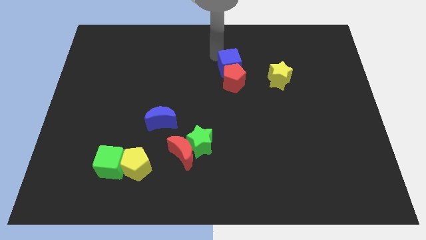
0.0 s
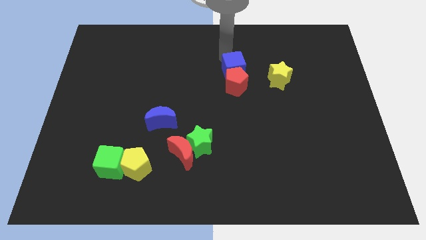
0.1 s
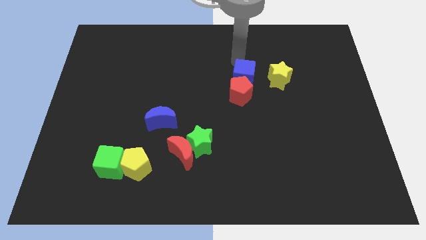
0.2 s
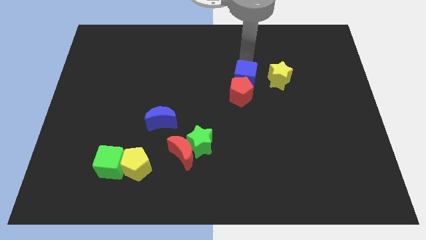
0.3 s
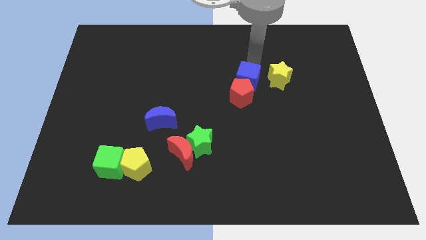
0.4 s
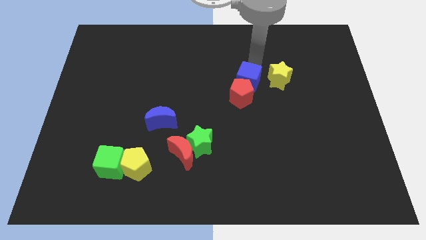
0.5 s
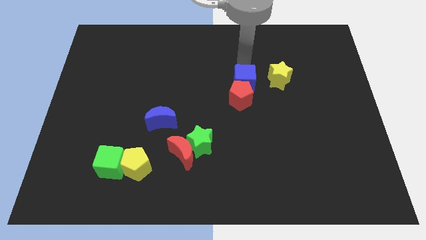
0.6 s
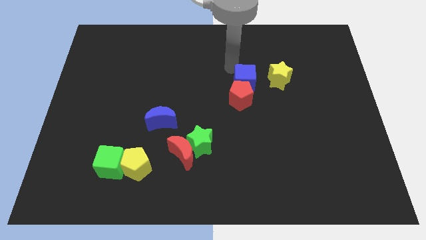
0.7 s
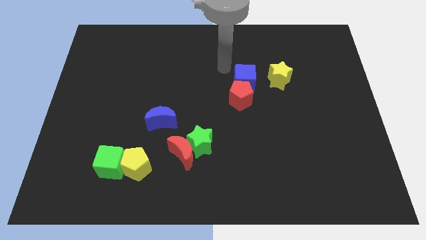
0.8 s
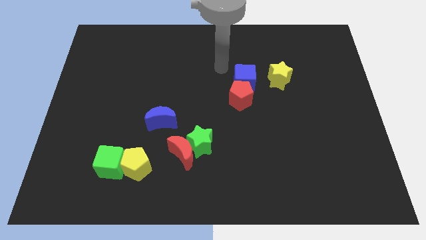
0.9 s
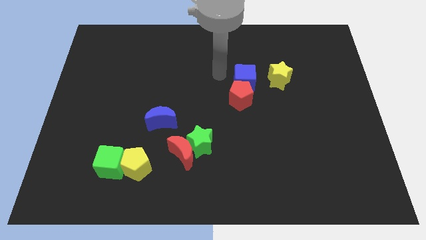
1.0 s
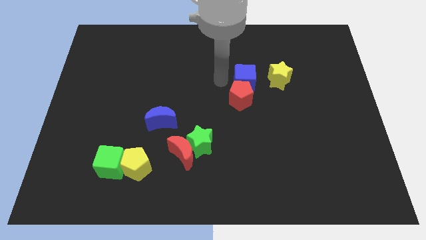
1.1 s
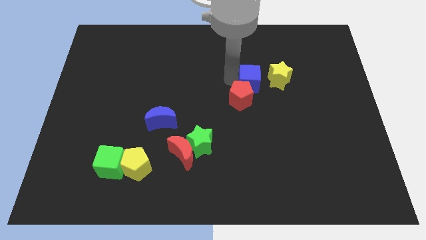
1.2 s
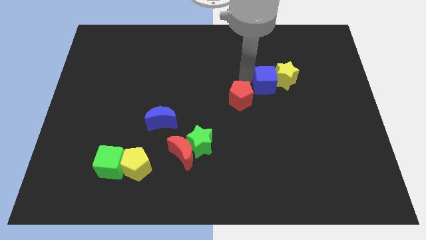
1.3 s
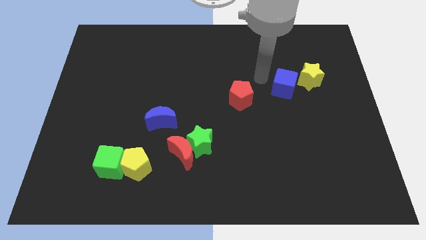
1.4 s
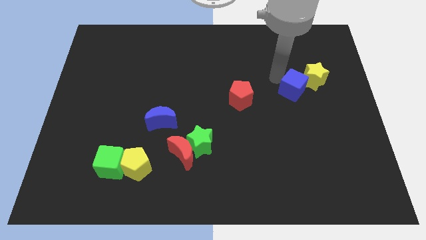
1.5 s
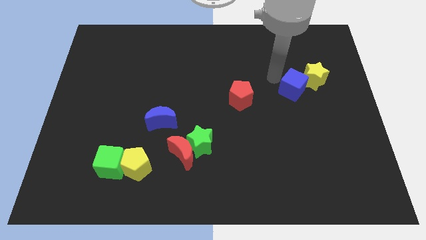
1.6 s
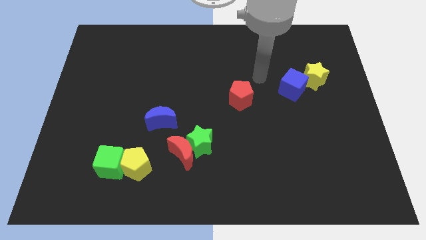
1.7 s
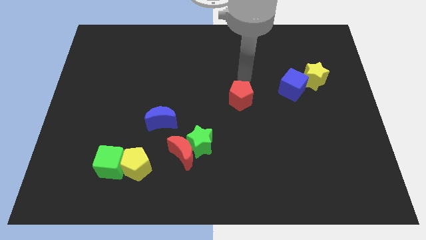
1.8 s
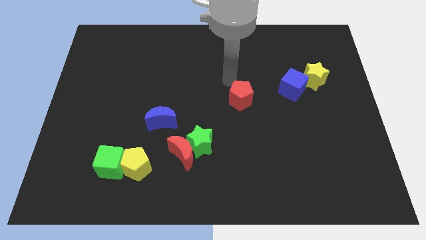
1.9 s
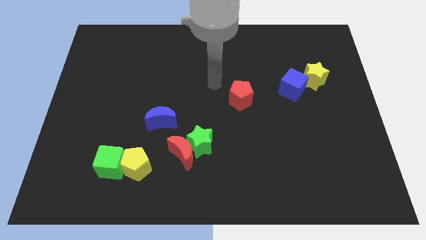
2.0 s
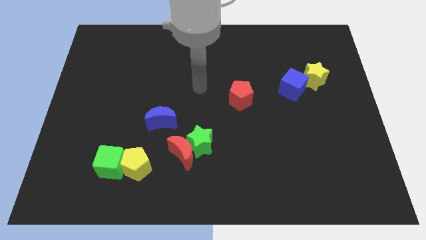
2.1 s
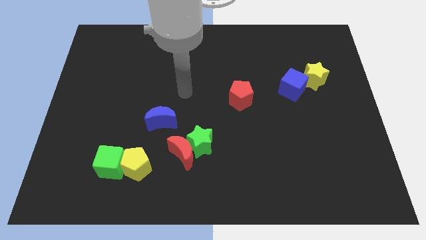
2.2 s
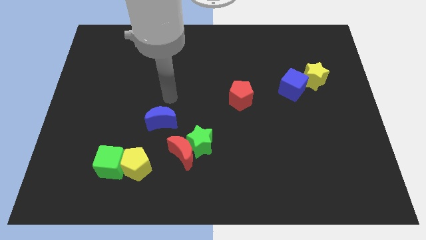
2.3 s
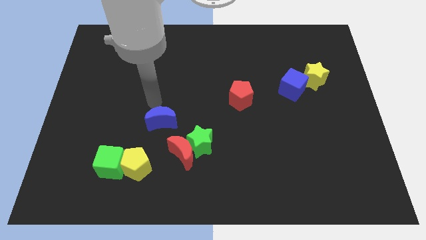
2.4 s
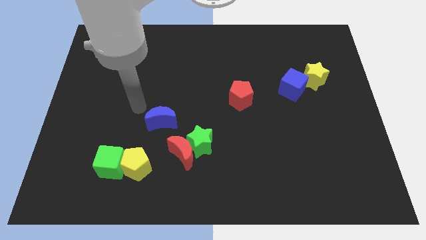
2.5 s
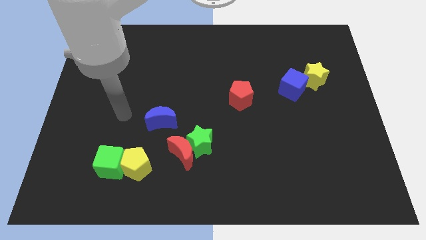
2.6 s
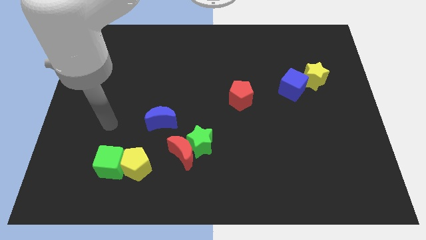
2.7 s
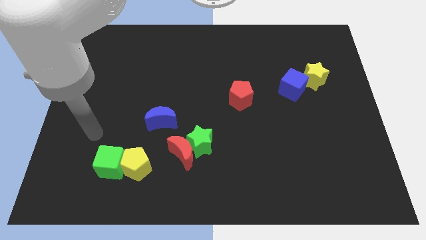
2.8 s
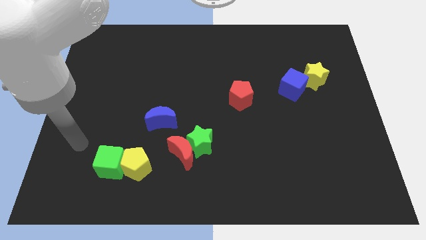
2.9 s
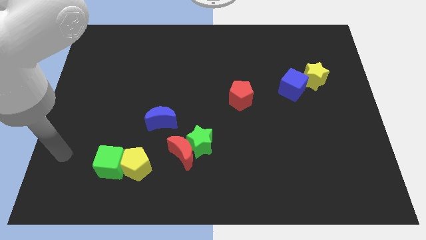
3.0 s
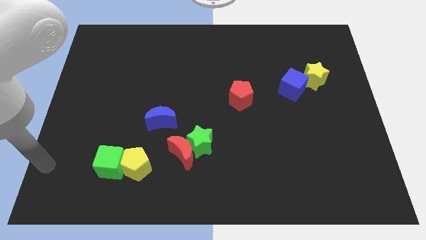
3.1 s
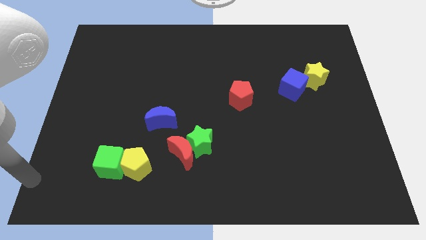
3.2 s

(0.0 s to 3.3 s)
move the blue cube near the yellow star

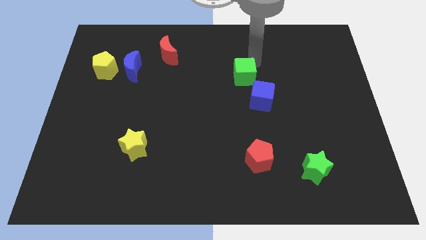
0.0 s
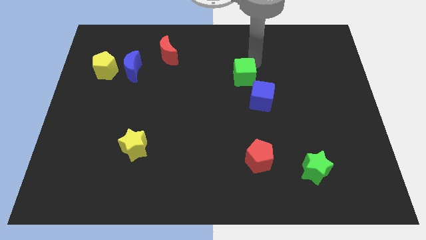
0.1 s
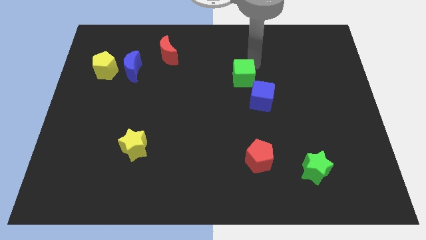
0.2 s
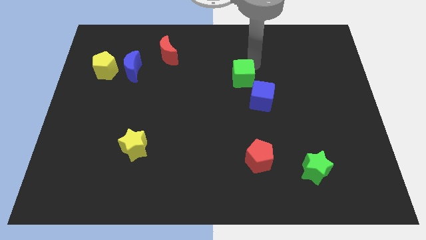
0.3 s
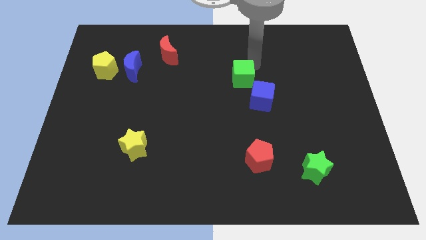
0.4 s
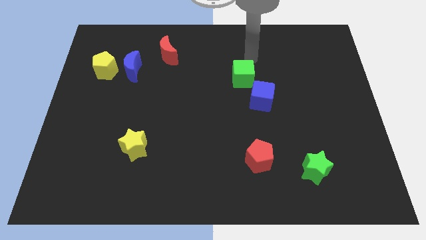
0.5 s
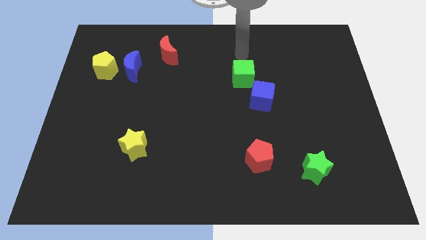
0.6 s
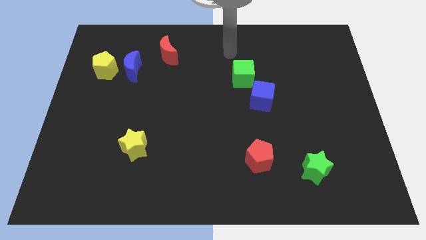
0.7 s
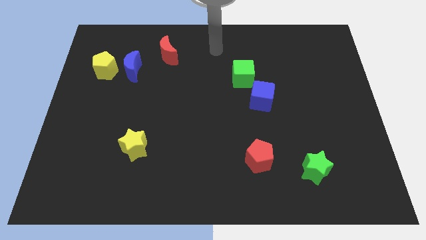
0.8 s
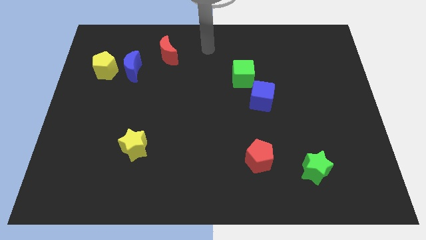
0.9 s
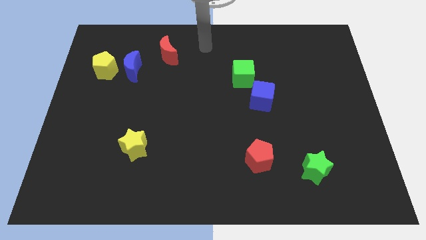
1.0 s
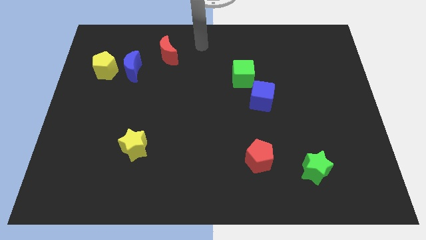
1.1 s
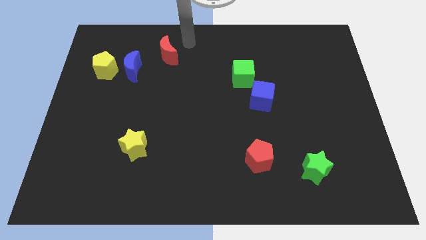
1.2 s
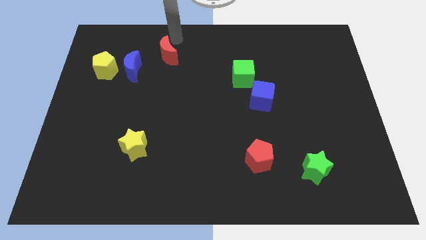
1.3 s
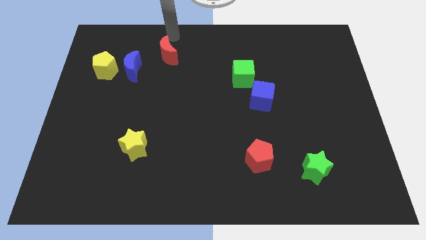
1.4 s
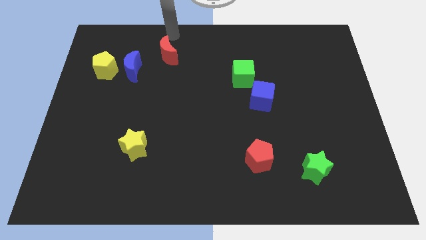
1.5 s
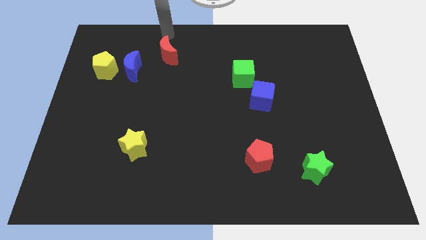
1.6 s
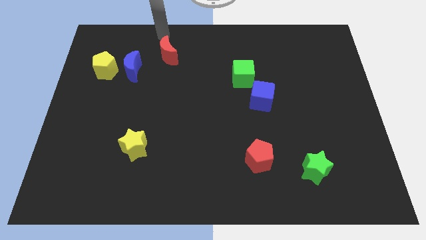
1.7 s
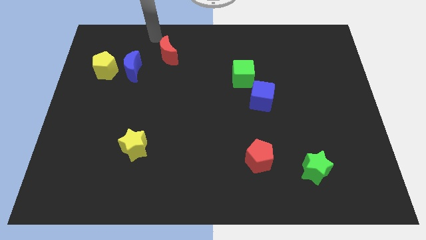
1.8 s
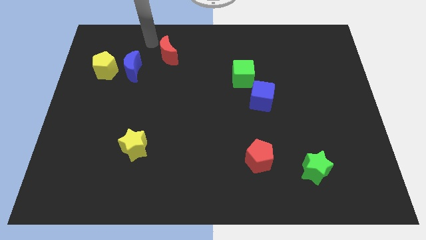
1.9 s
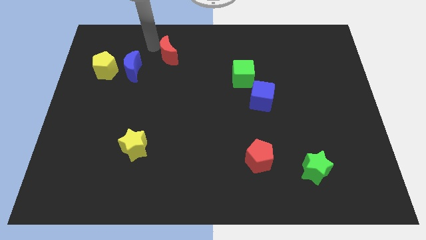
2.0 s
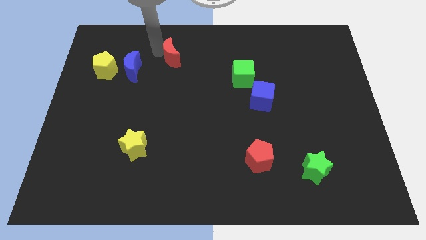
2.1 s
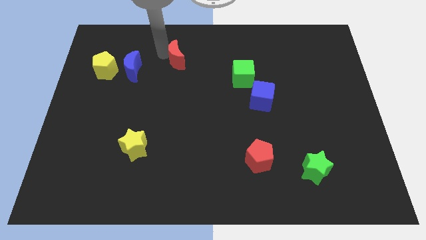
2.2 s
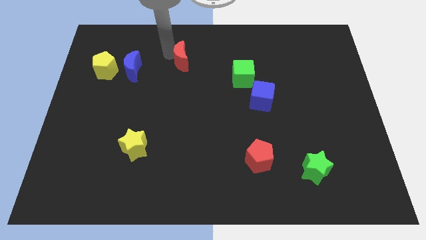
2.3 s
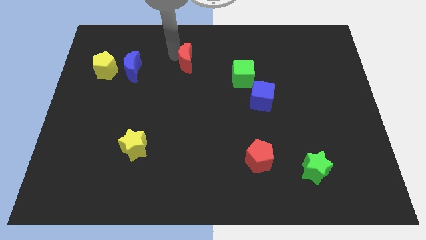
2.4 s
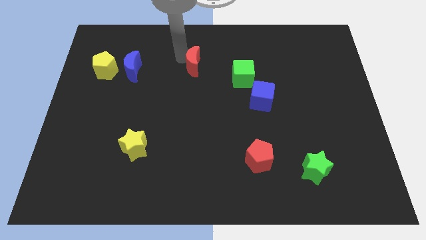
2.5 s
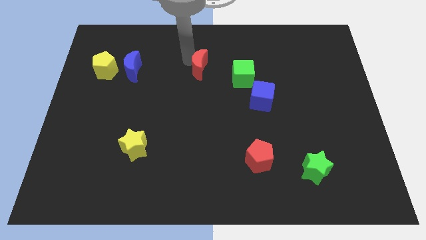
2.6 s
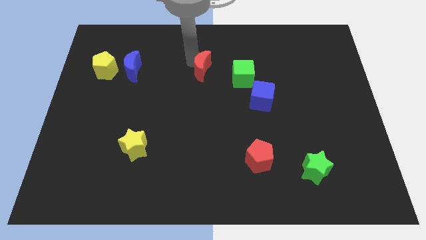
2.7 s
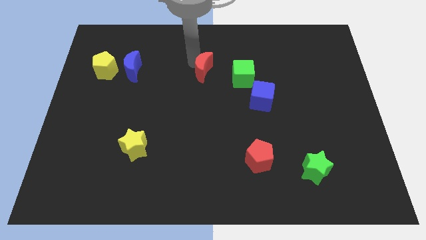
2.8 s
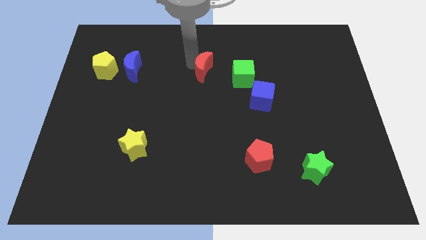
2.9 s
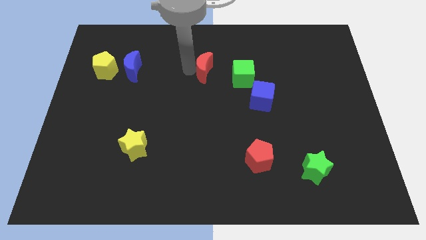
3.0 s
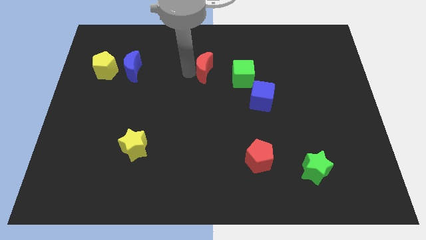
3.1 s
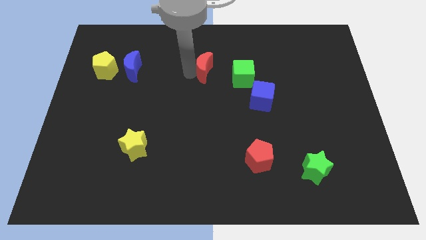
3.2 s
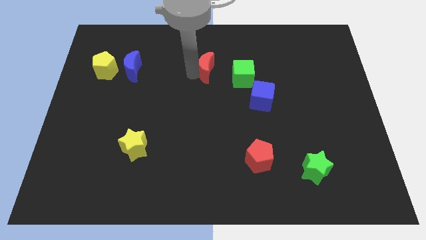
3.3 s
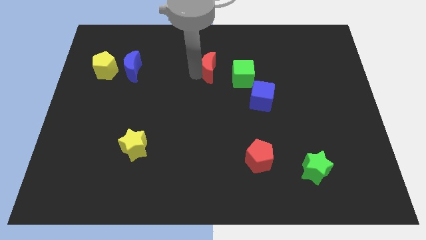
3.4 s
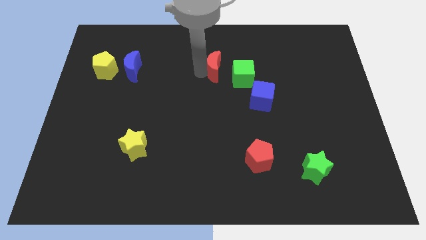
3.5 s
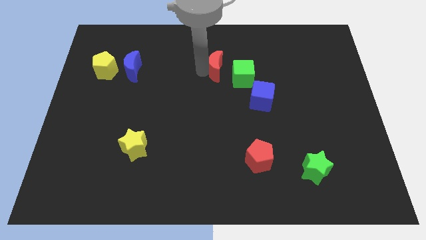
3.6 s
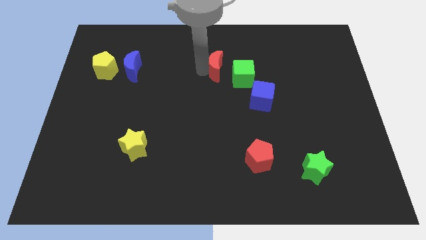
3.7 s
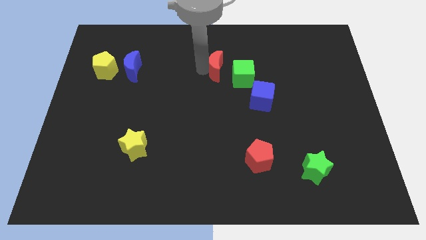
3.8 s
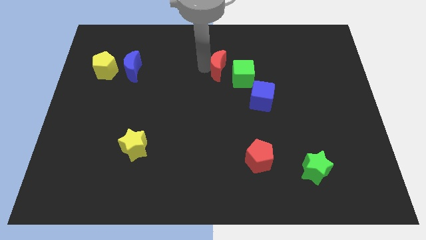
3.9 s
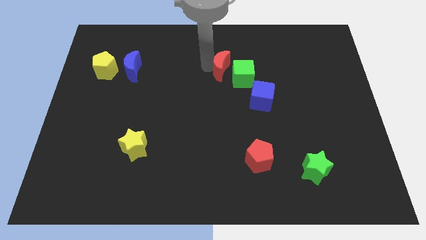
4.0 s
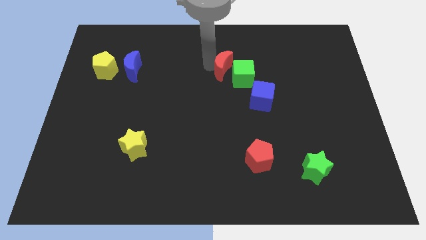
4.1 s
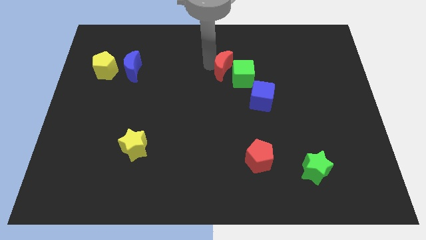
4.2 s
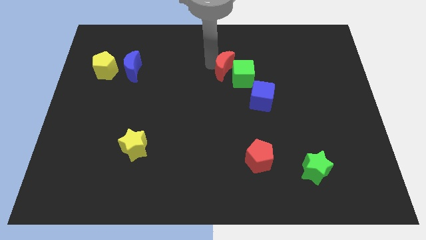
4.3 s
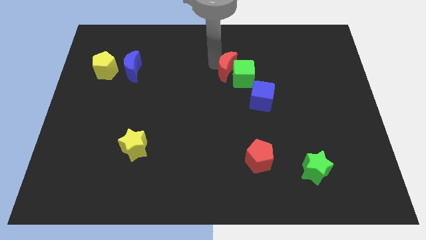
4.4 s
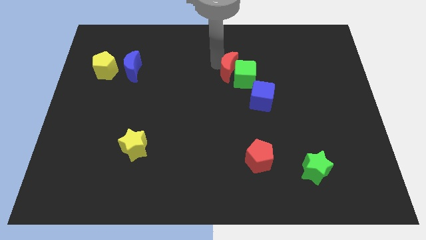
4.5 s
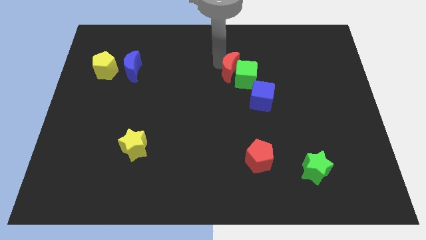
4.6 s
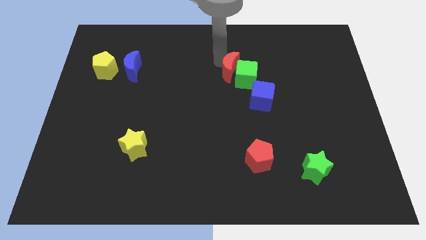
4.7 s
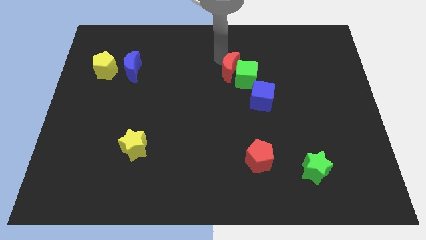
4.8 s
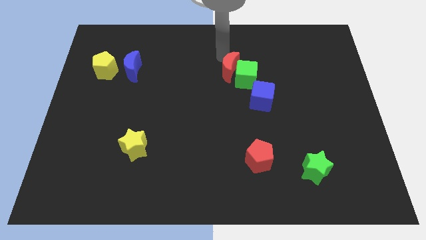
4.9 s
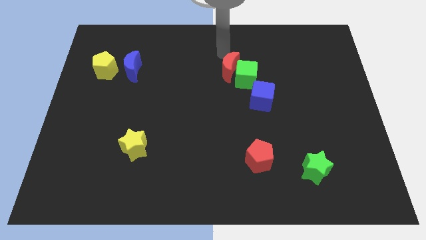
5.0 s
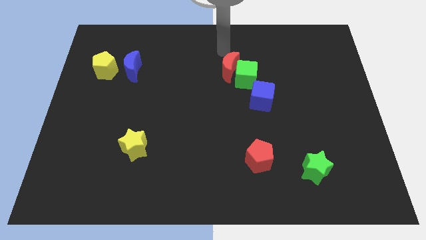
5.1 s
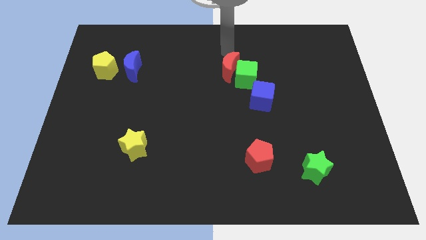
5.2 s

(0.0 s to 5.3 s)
move red moon into green cube

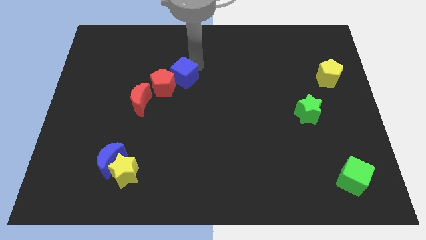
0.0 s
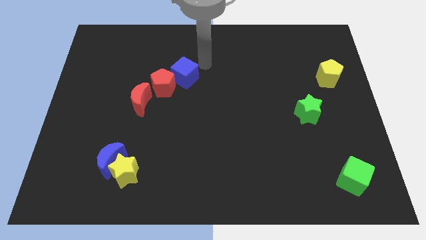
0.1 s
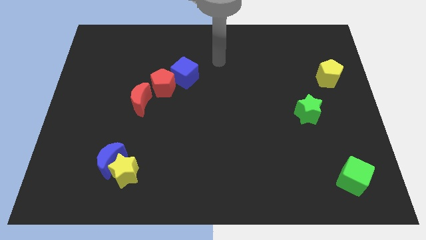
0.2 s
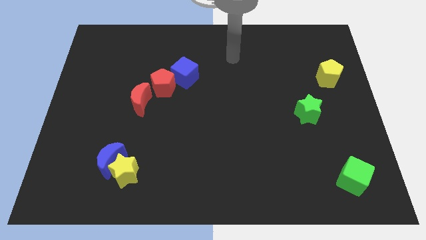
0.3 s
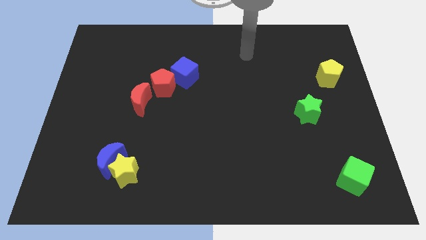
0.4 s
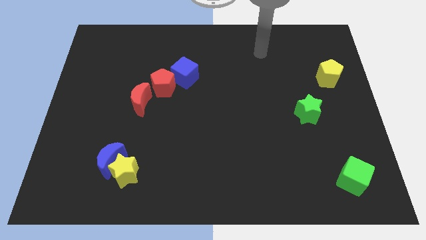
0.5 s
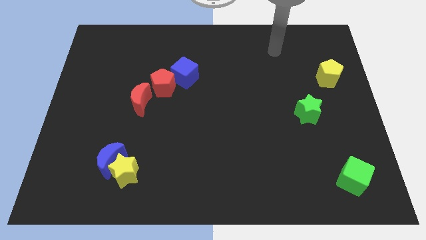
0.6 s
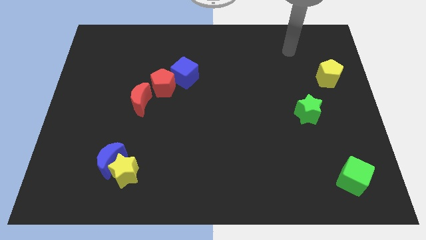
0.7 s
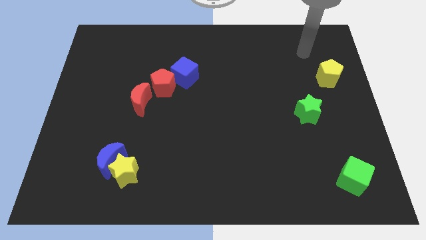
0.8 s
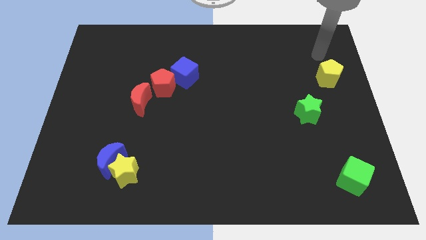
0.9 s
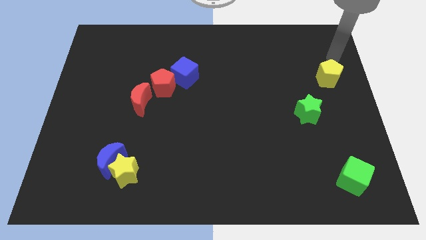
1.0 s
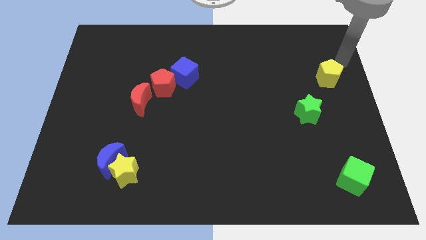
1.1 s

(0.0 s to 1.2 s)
move the arm away from the blue cube
